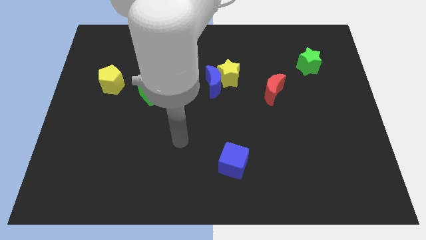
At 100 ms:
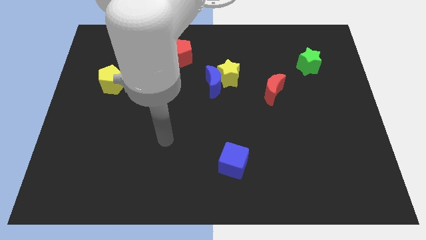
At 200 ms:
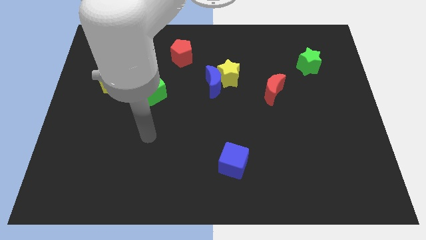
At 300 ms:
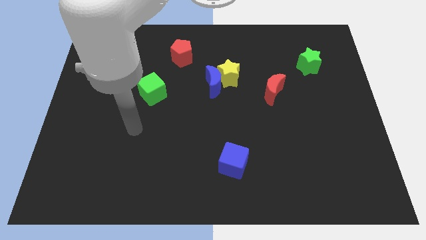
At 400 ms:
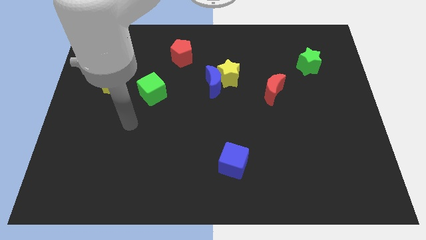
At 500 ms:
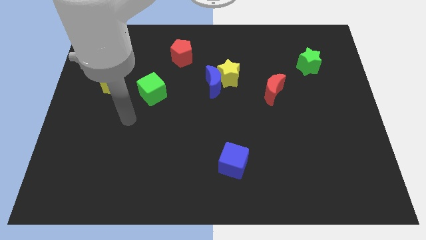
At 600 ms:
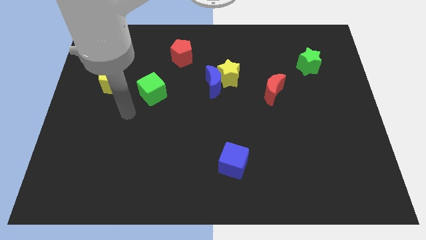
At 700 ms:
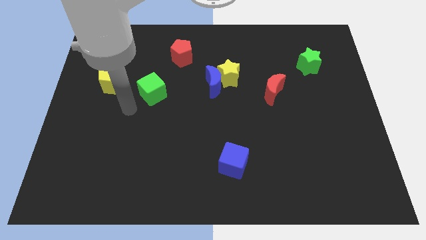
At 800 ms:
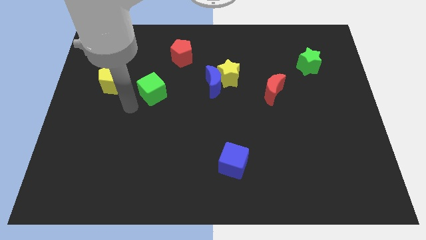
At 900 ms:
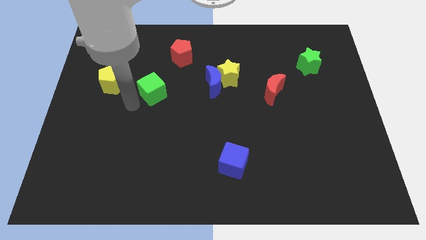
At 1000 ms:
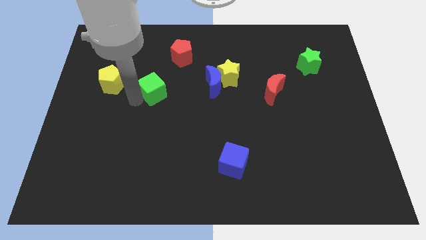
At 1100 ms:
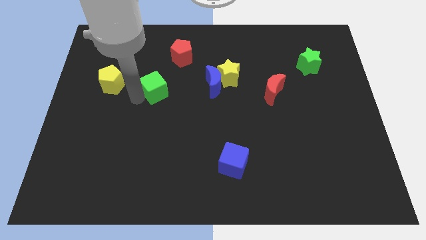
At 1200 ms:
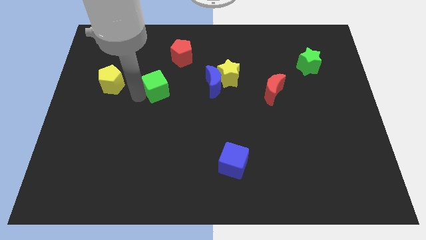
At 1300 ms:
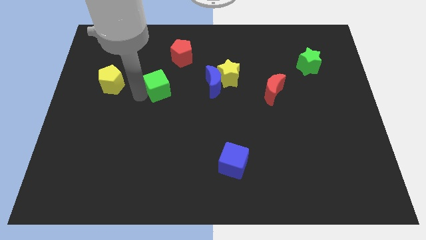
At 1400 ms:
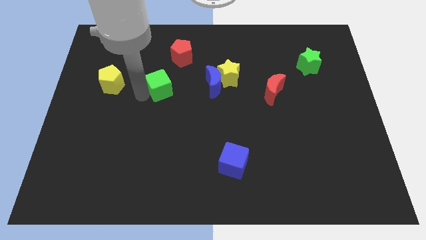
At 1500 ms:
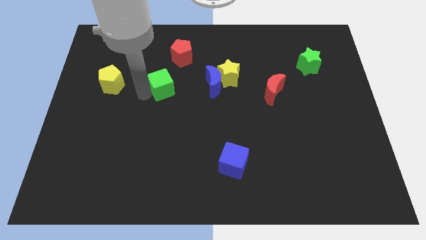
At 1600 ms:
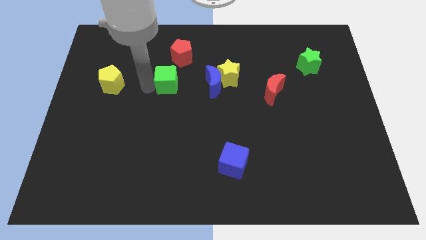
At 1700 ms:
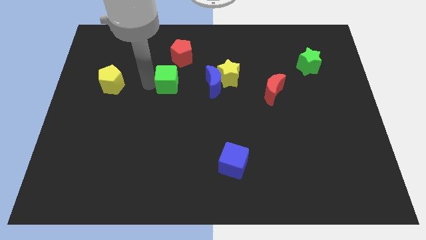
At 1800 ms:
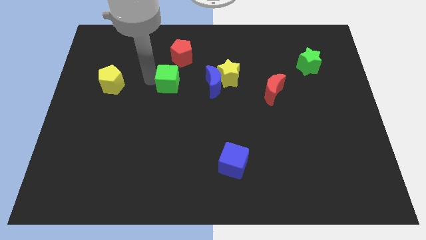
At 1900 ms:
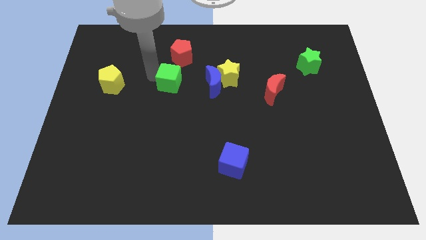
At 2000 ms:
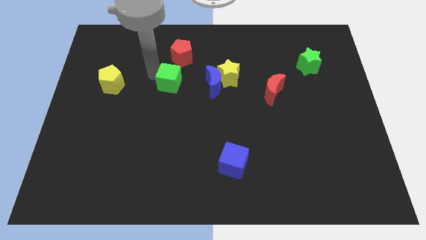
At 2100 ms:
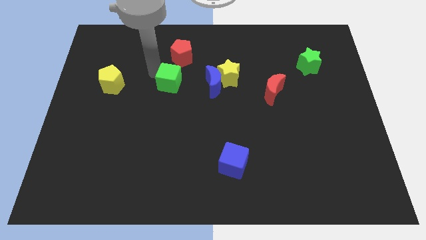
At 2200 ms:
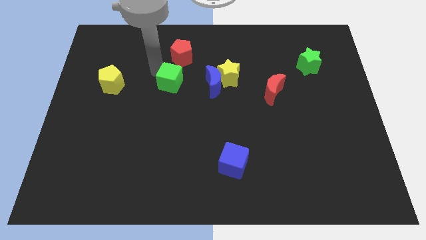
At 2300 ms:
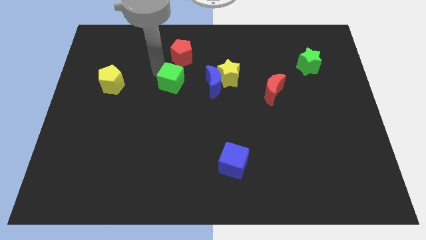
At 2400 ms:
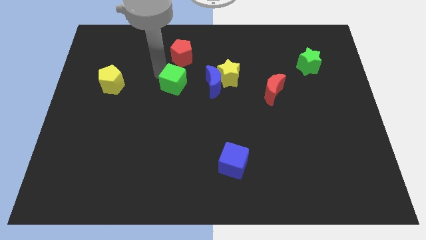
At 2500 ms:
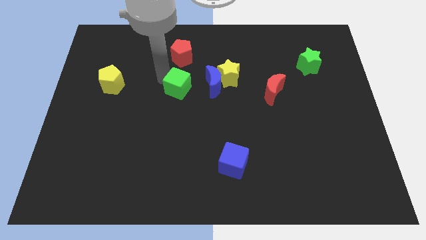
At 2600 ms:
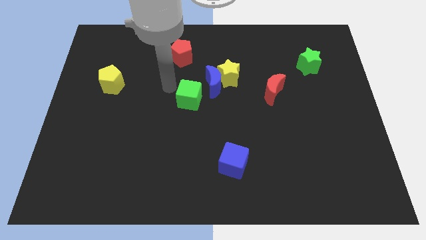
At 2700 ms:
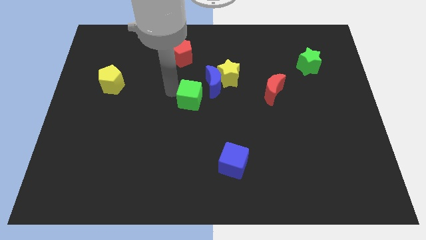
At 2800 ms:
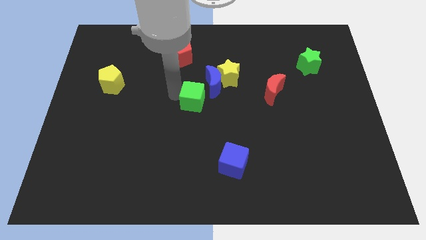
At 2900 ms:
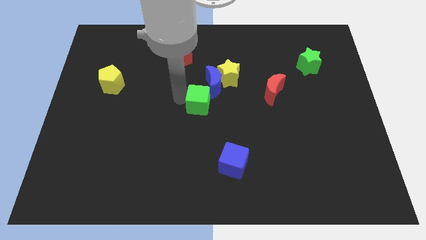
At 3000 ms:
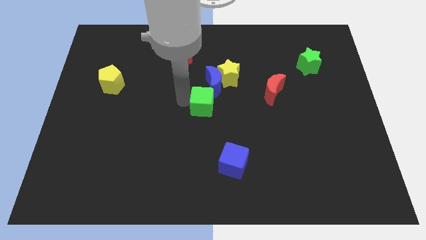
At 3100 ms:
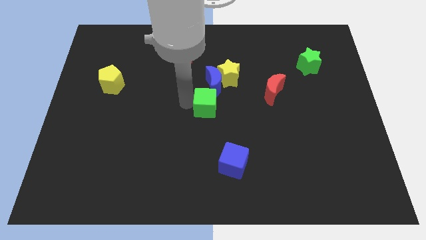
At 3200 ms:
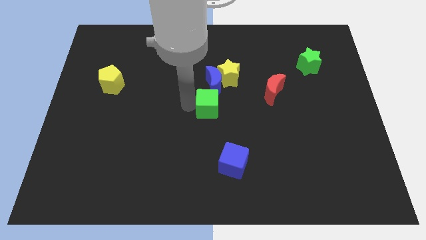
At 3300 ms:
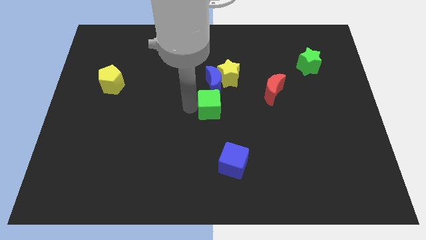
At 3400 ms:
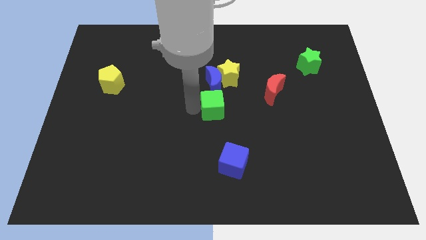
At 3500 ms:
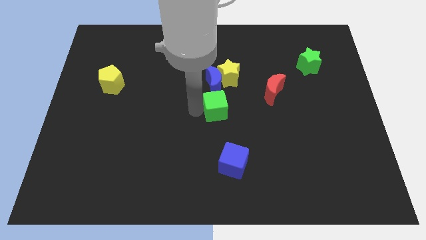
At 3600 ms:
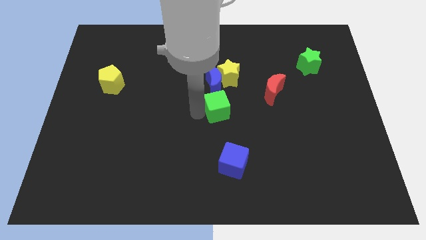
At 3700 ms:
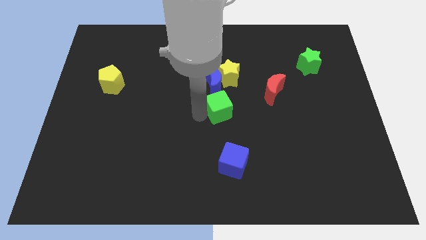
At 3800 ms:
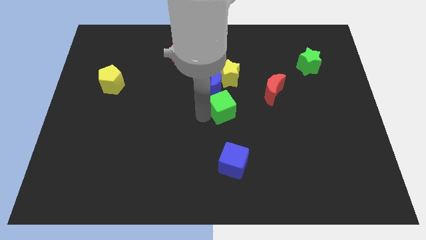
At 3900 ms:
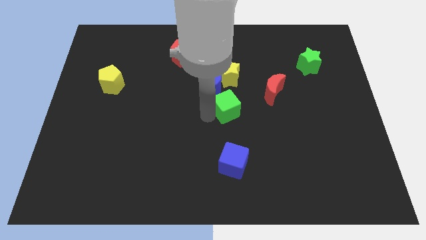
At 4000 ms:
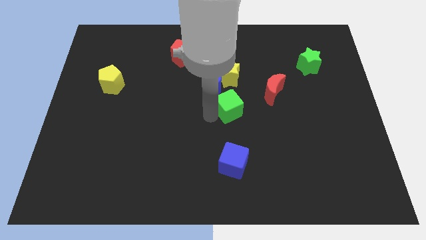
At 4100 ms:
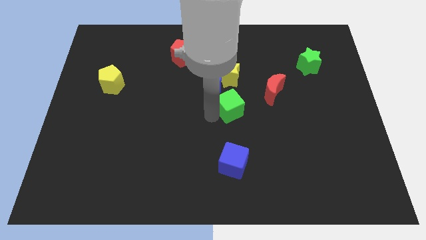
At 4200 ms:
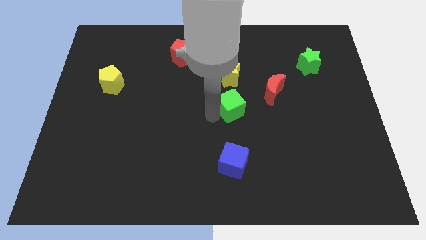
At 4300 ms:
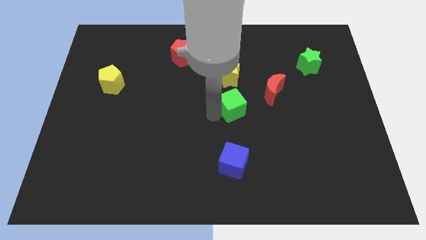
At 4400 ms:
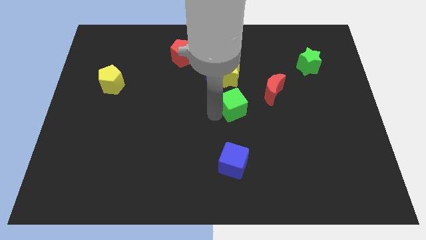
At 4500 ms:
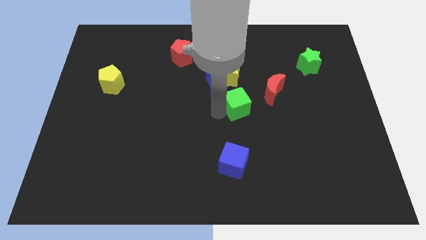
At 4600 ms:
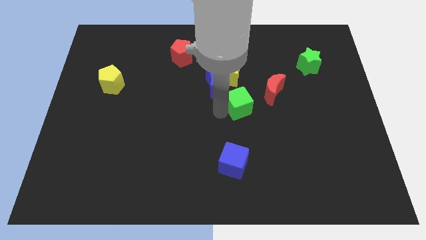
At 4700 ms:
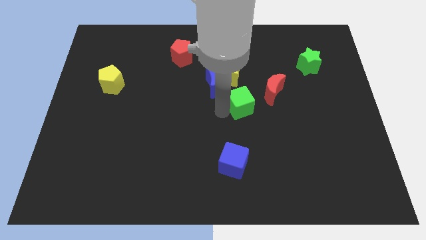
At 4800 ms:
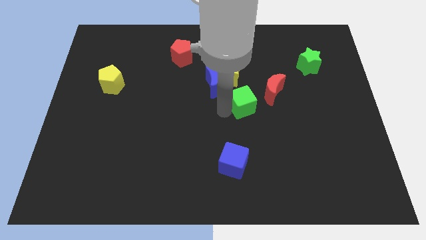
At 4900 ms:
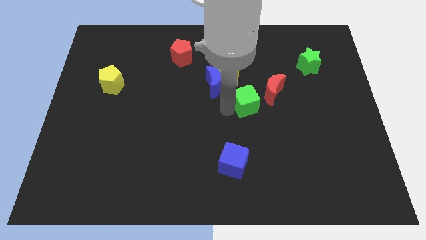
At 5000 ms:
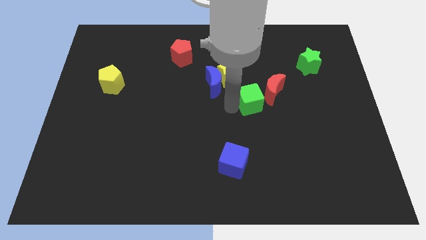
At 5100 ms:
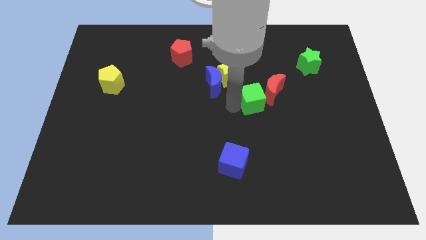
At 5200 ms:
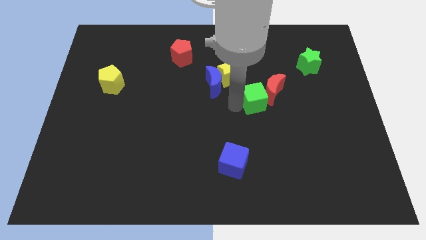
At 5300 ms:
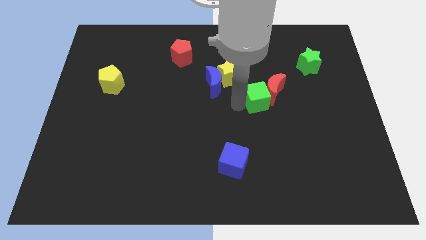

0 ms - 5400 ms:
slide the green cube towards the red moon

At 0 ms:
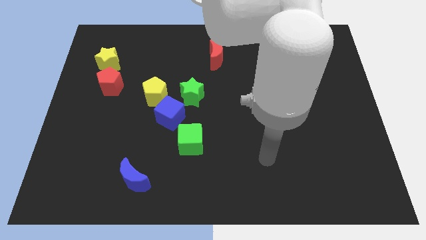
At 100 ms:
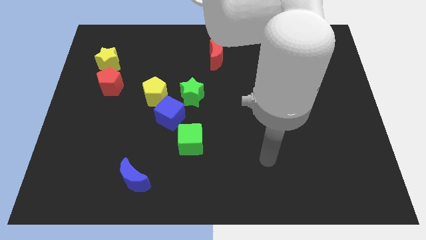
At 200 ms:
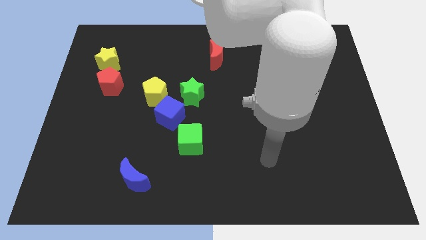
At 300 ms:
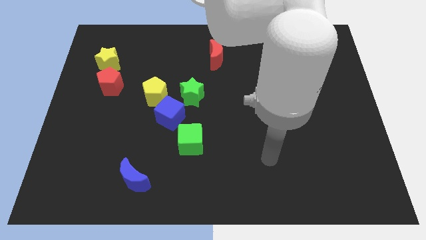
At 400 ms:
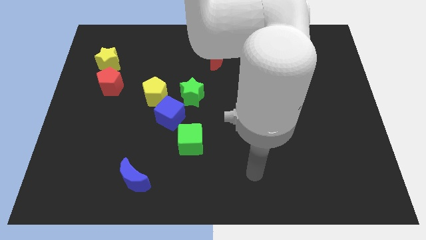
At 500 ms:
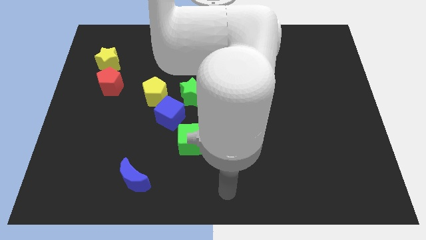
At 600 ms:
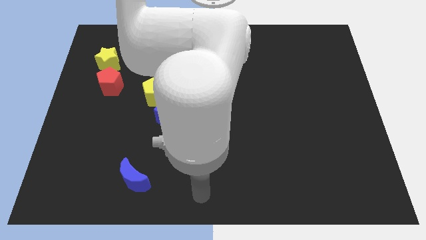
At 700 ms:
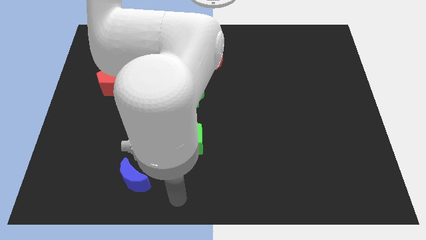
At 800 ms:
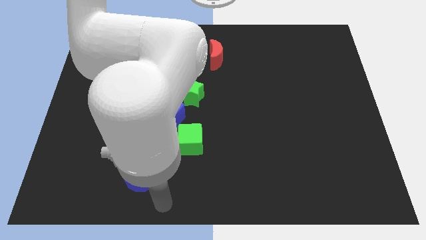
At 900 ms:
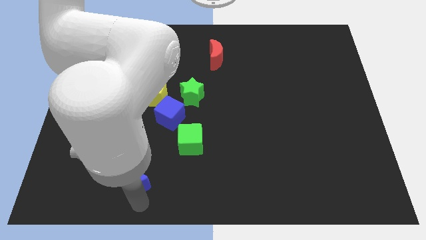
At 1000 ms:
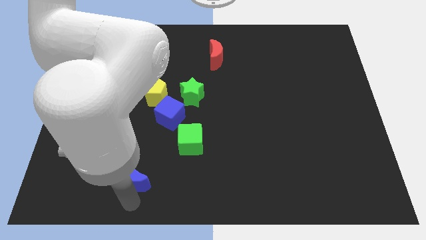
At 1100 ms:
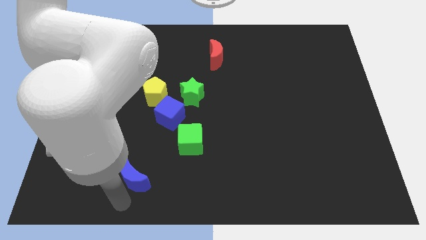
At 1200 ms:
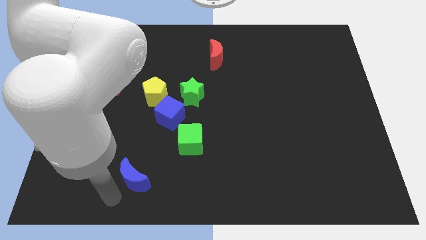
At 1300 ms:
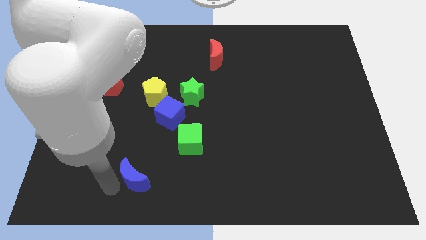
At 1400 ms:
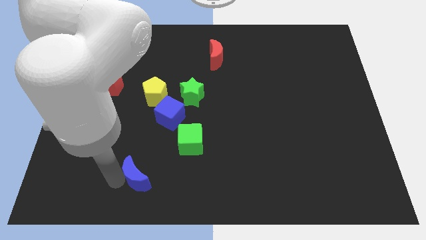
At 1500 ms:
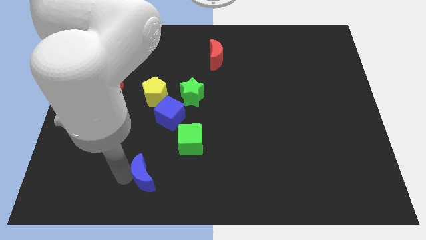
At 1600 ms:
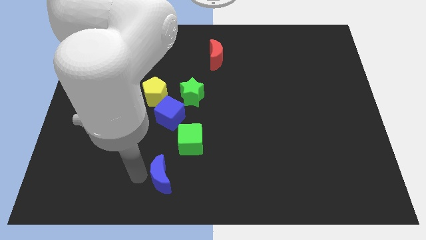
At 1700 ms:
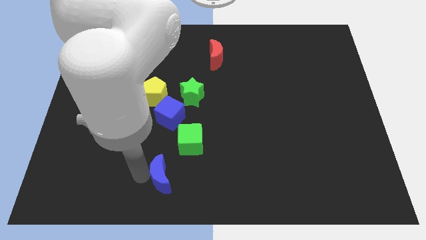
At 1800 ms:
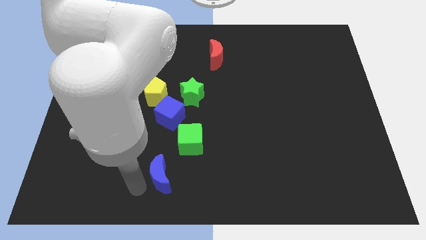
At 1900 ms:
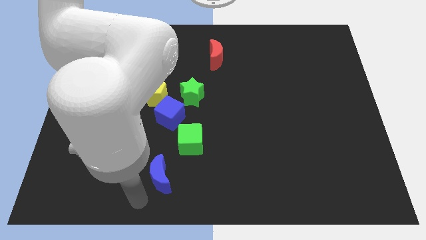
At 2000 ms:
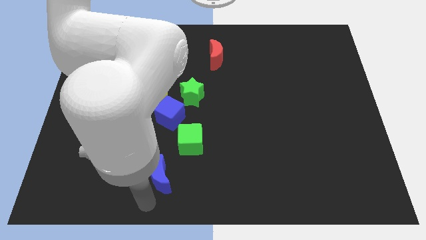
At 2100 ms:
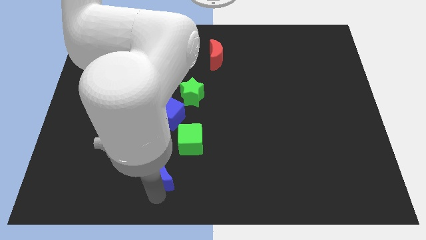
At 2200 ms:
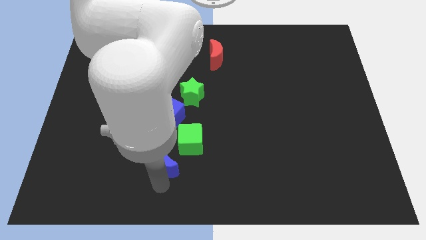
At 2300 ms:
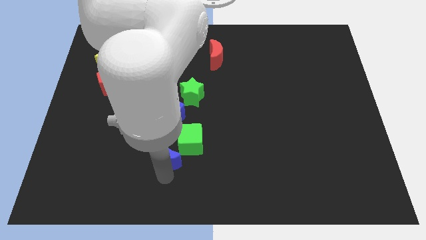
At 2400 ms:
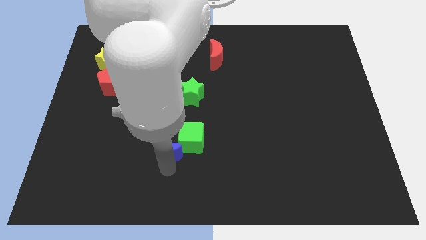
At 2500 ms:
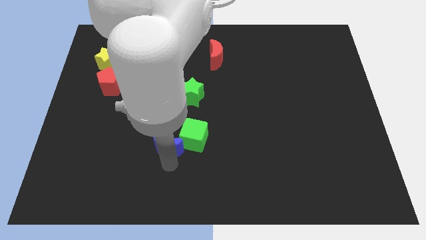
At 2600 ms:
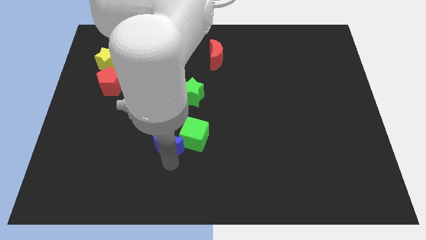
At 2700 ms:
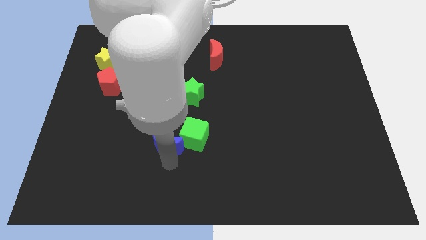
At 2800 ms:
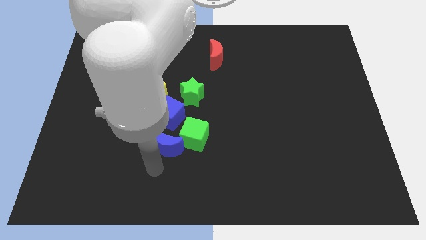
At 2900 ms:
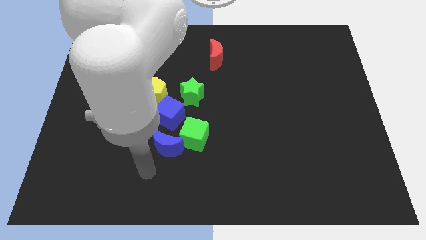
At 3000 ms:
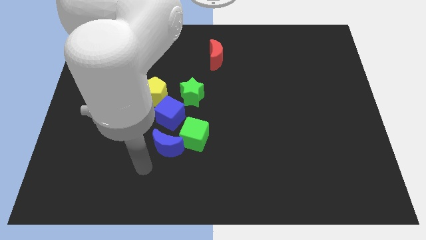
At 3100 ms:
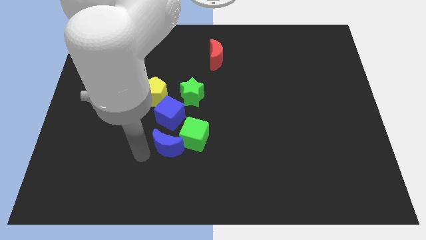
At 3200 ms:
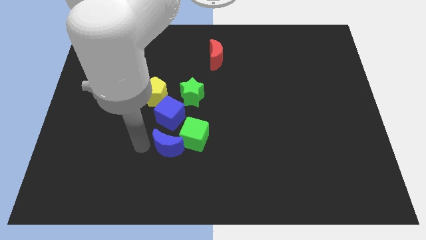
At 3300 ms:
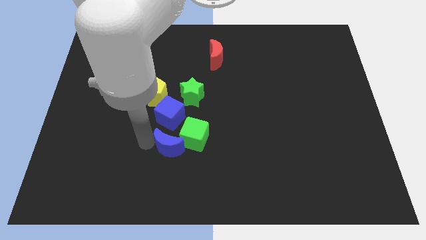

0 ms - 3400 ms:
push the blue moon next to the green cube
